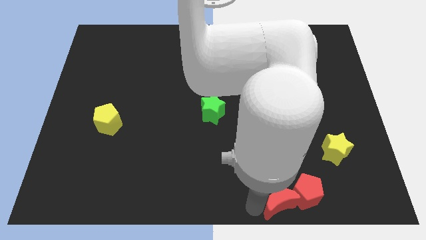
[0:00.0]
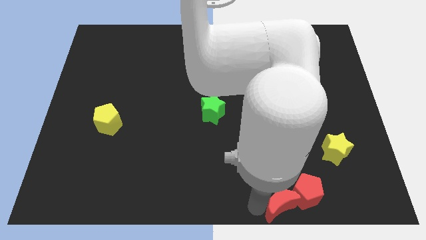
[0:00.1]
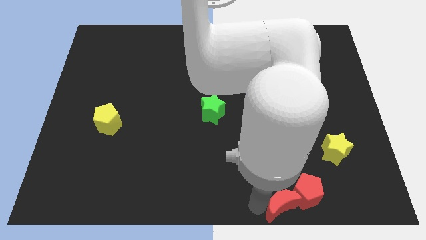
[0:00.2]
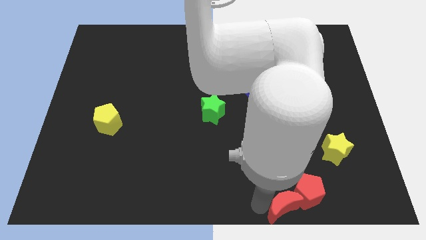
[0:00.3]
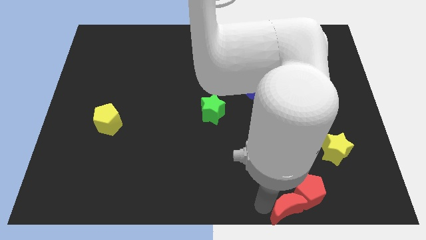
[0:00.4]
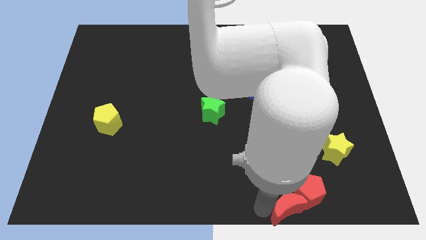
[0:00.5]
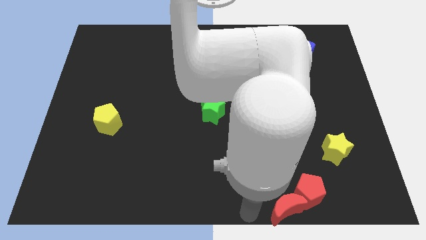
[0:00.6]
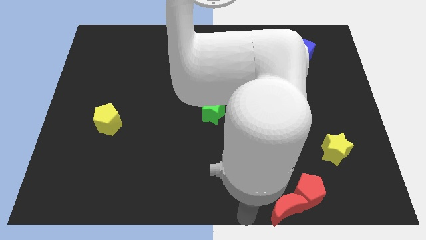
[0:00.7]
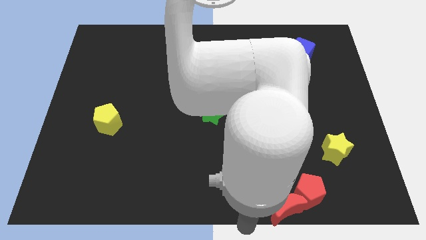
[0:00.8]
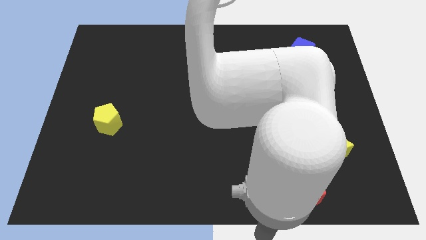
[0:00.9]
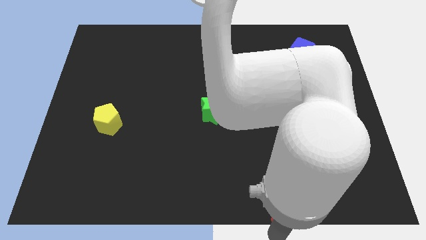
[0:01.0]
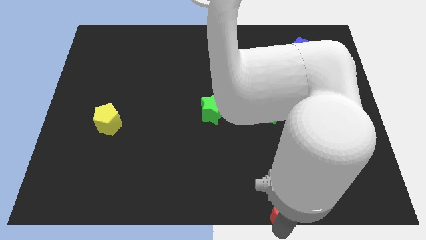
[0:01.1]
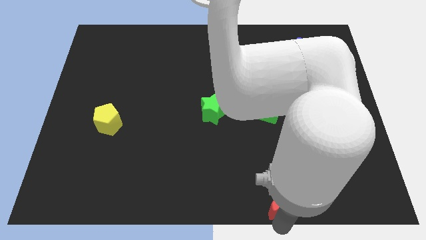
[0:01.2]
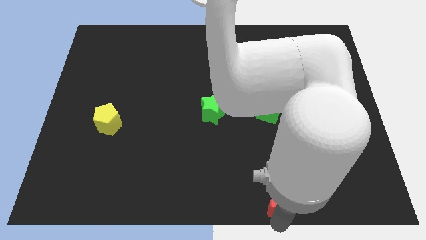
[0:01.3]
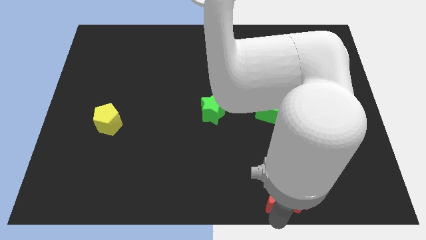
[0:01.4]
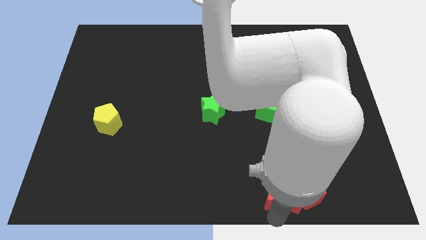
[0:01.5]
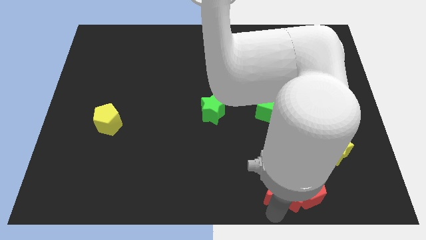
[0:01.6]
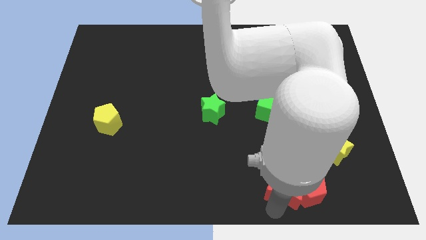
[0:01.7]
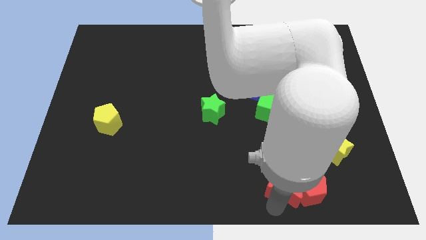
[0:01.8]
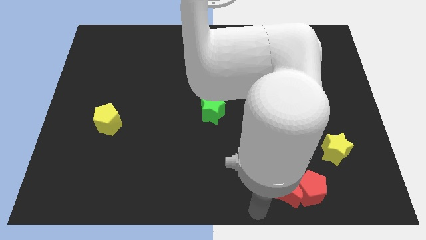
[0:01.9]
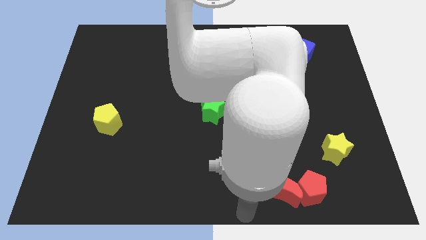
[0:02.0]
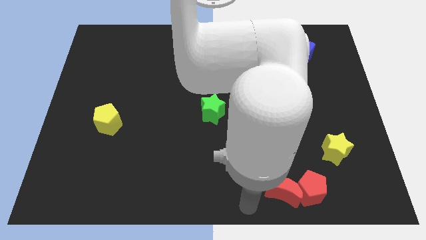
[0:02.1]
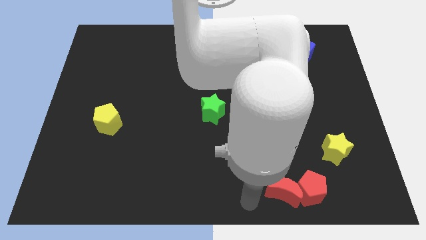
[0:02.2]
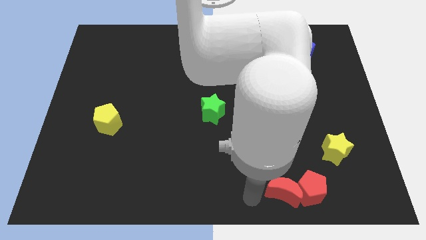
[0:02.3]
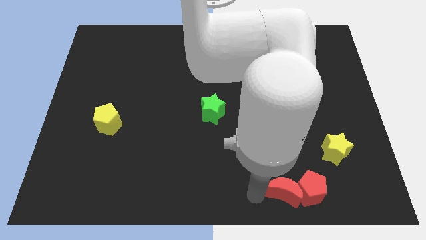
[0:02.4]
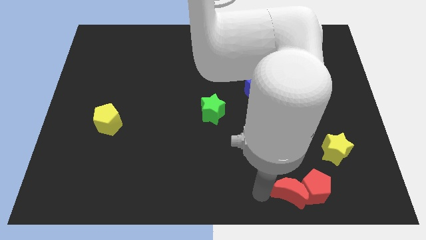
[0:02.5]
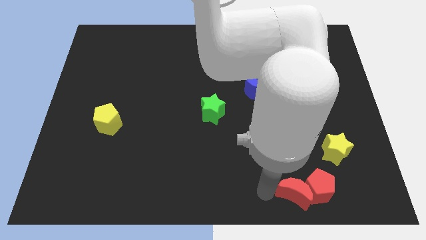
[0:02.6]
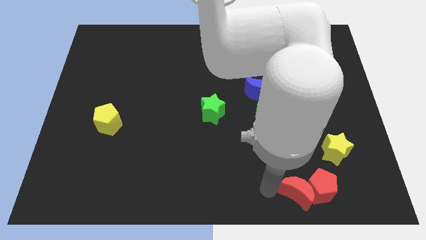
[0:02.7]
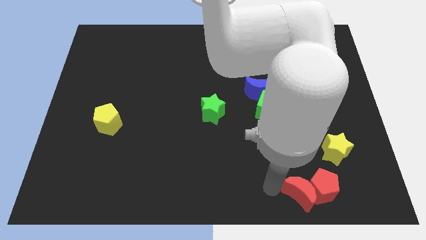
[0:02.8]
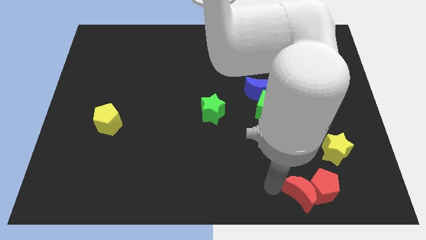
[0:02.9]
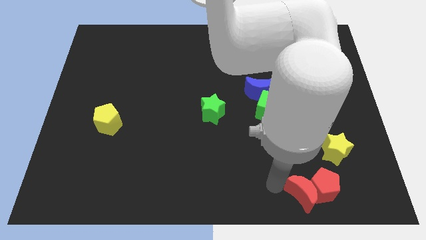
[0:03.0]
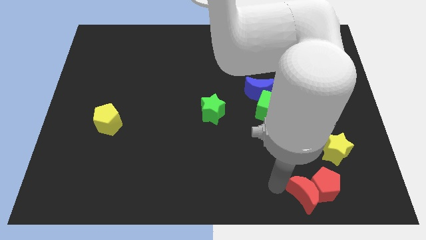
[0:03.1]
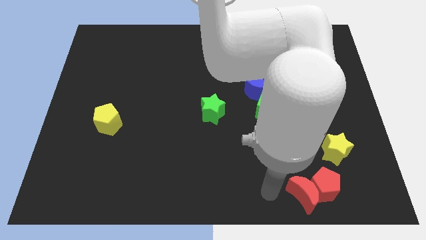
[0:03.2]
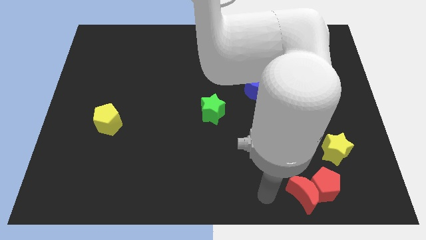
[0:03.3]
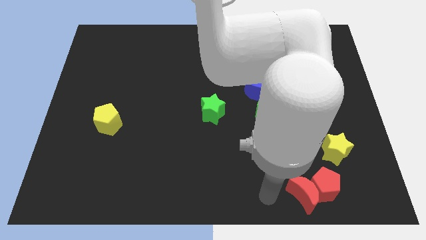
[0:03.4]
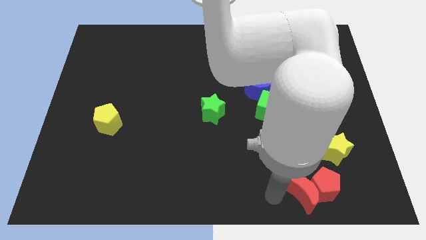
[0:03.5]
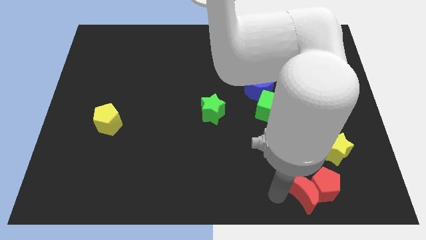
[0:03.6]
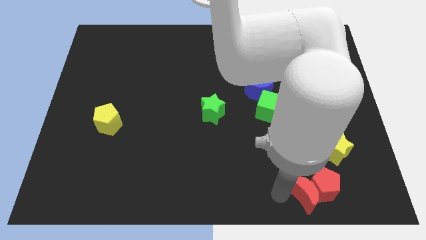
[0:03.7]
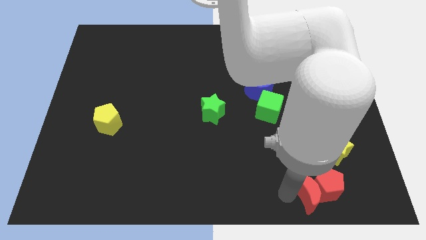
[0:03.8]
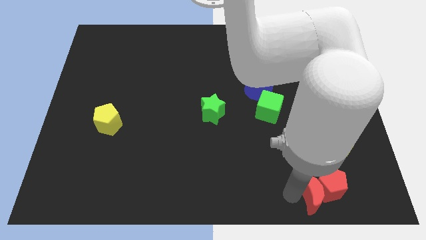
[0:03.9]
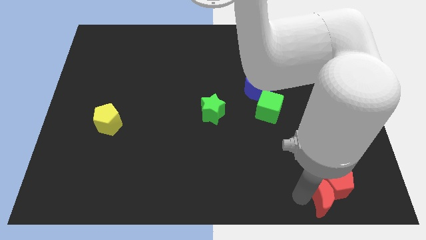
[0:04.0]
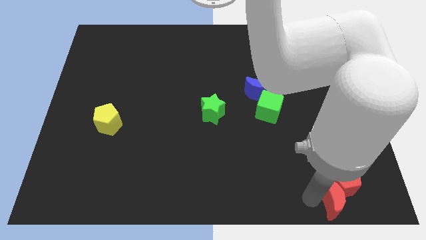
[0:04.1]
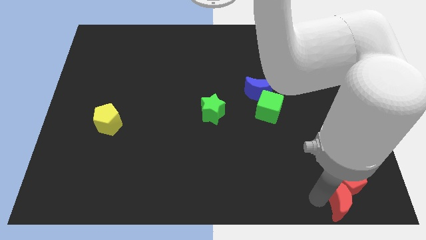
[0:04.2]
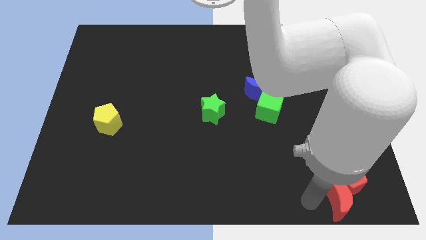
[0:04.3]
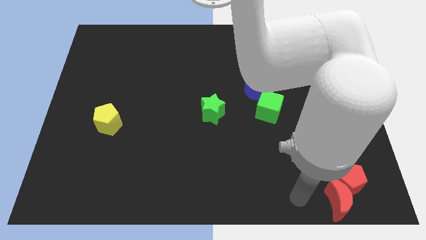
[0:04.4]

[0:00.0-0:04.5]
move the red blocks to the bottom of the yellow star

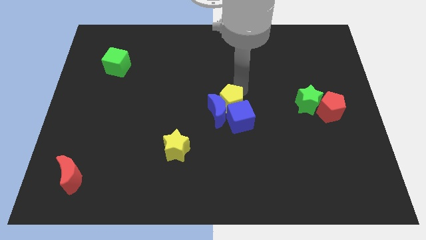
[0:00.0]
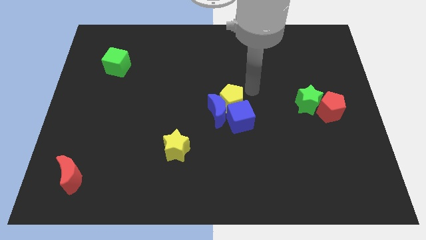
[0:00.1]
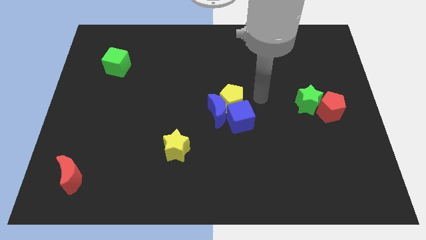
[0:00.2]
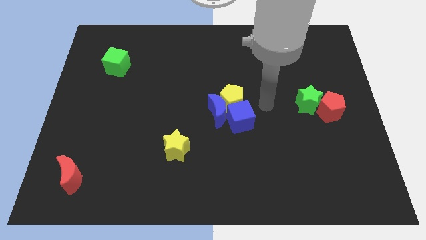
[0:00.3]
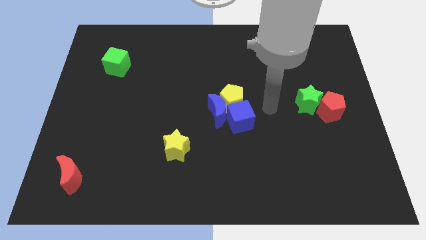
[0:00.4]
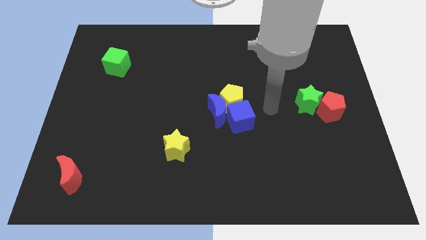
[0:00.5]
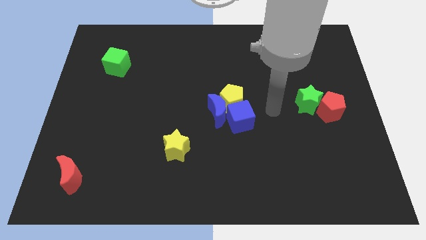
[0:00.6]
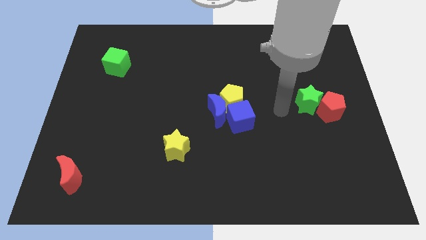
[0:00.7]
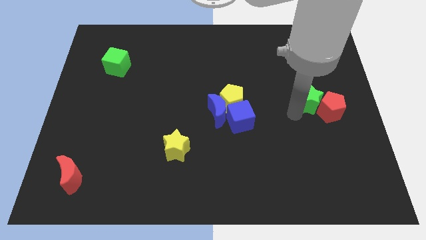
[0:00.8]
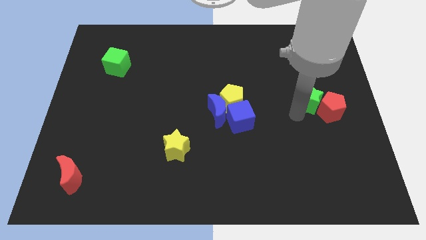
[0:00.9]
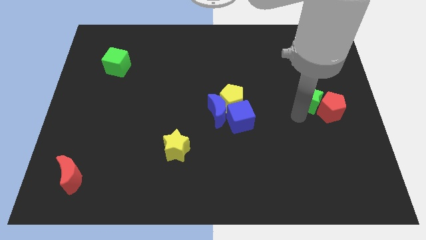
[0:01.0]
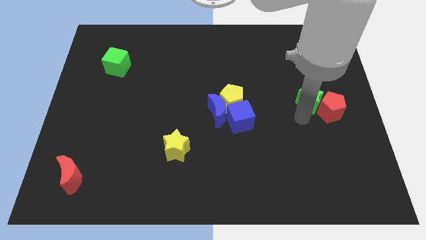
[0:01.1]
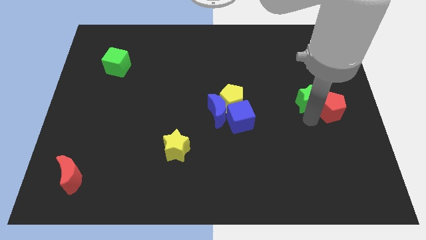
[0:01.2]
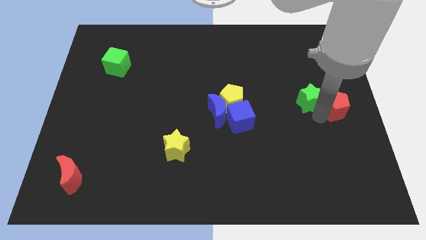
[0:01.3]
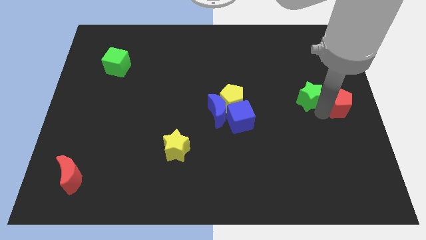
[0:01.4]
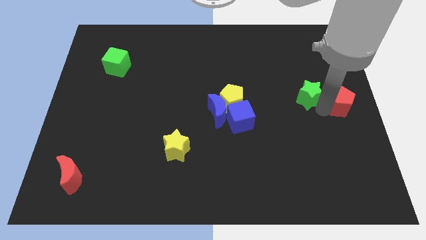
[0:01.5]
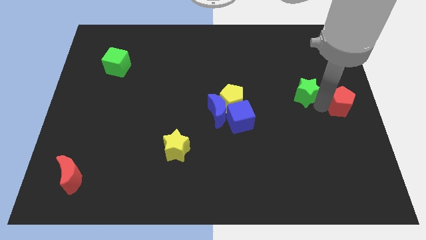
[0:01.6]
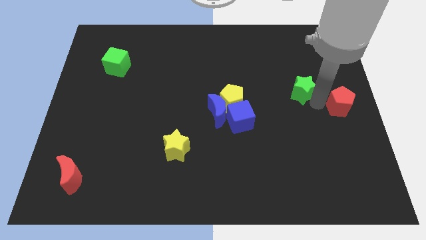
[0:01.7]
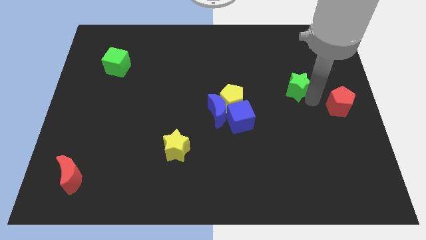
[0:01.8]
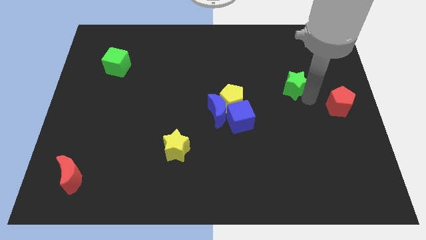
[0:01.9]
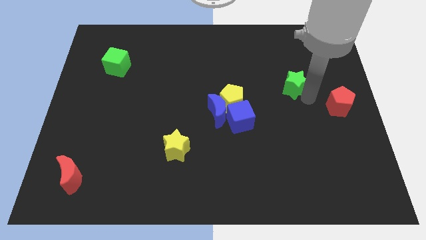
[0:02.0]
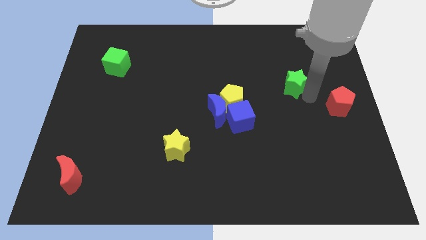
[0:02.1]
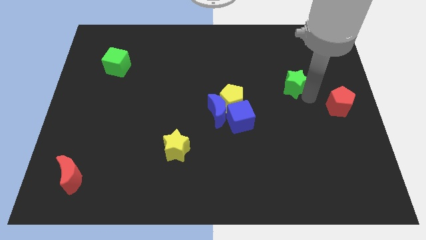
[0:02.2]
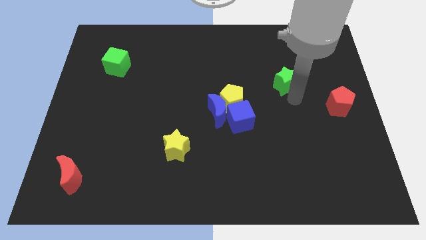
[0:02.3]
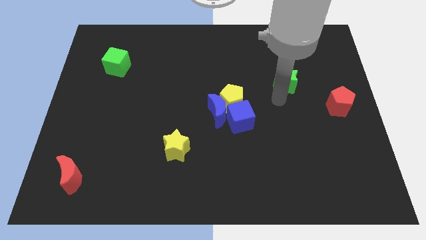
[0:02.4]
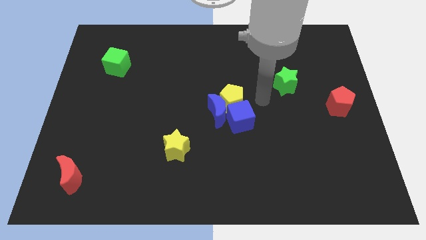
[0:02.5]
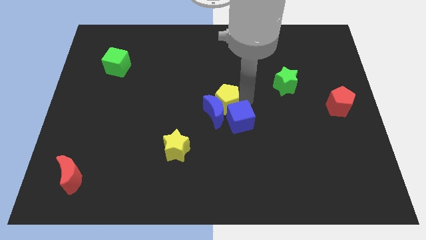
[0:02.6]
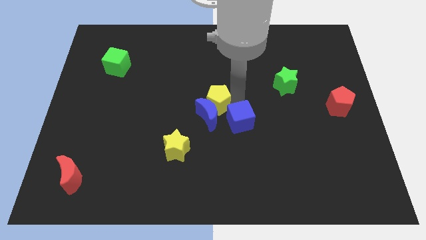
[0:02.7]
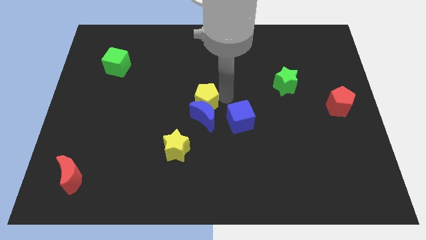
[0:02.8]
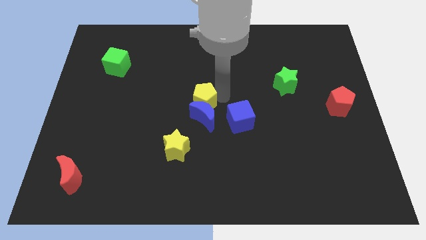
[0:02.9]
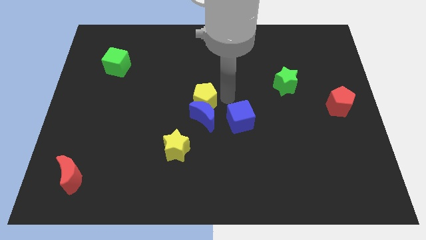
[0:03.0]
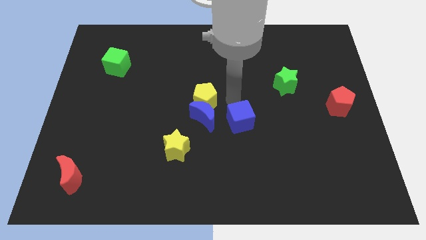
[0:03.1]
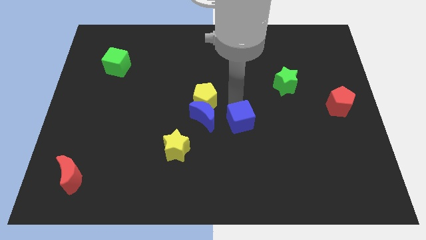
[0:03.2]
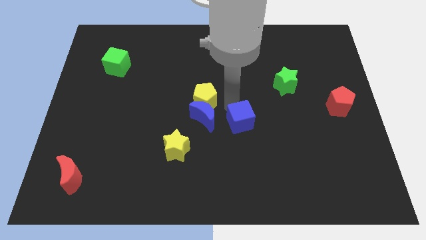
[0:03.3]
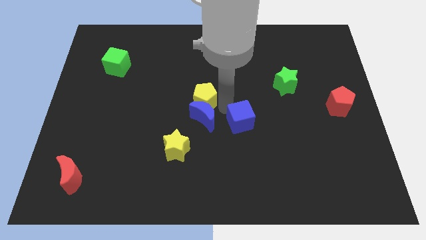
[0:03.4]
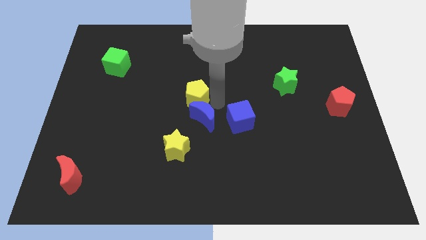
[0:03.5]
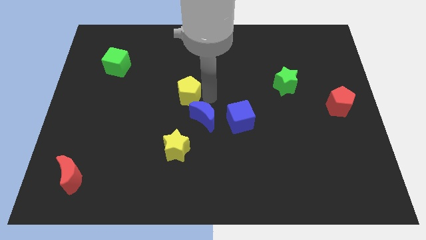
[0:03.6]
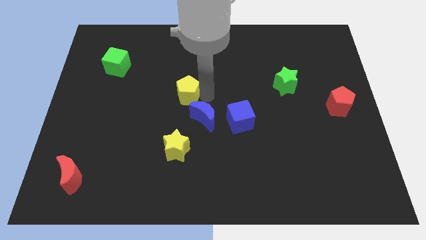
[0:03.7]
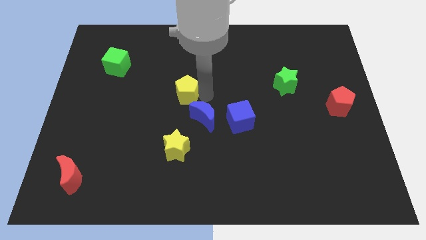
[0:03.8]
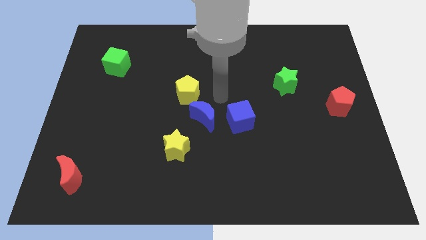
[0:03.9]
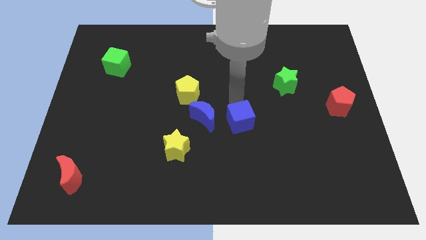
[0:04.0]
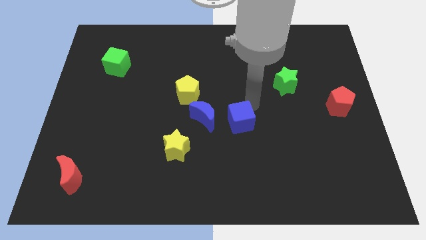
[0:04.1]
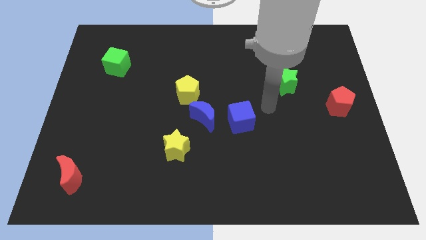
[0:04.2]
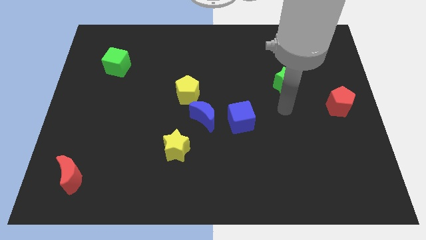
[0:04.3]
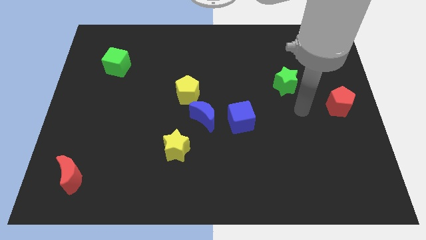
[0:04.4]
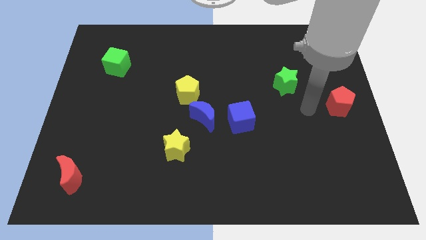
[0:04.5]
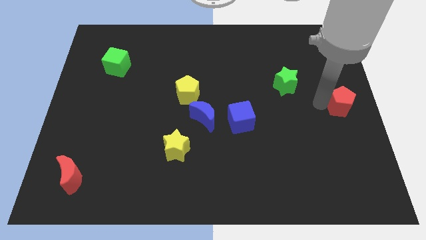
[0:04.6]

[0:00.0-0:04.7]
push the green star and yellow pentagon in different directions
